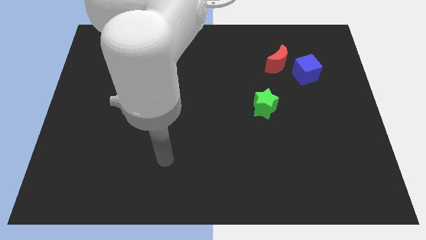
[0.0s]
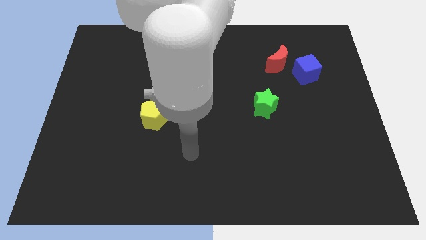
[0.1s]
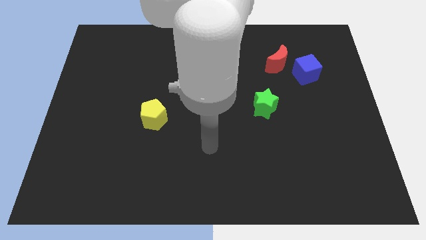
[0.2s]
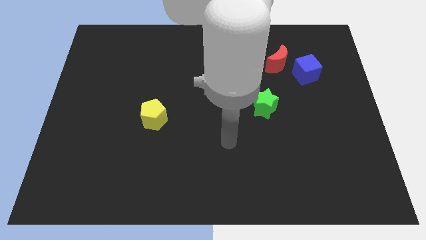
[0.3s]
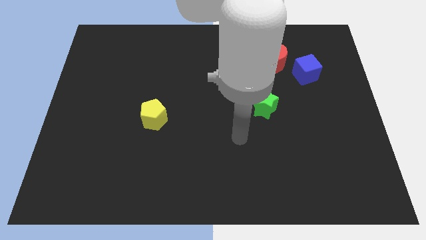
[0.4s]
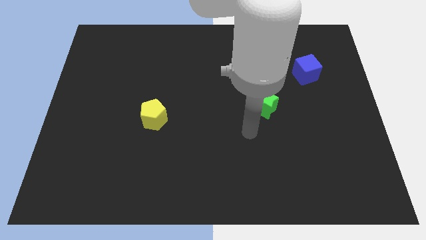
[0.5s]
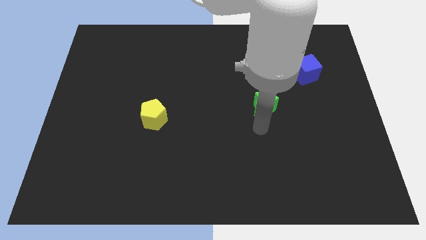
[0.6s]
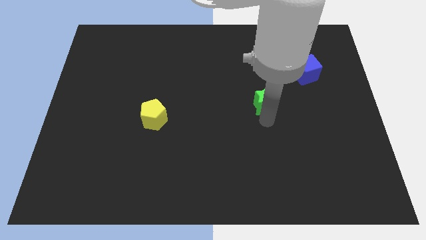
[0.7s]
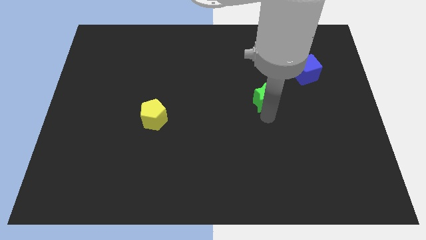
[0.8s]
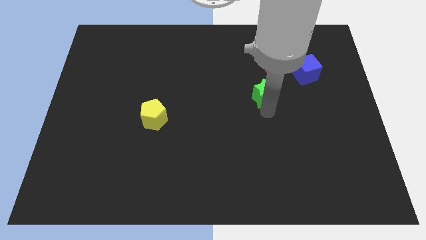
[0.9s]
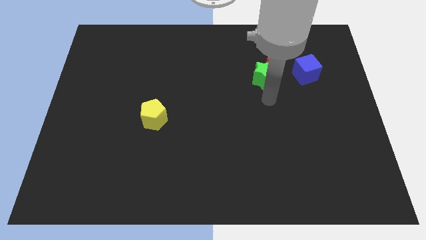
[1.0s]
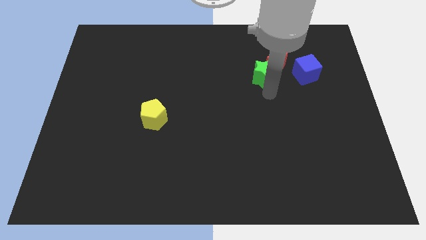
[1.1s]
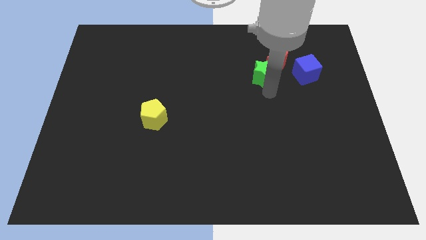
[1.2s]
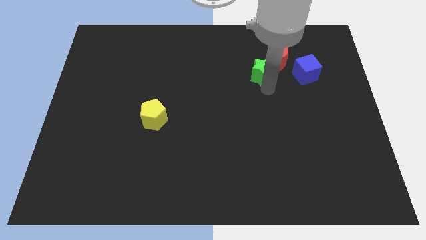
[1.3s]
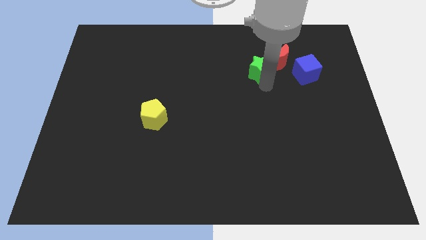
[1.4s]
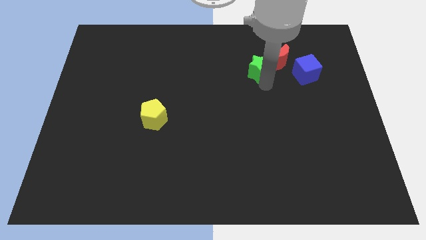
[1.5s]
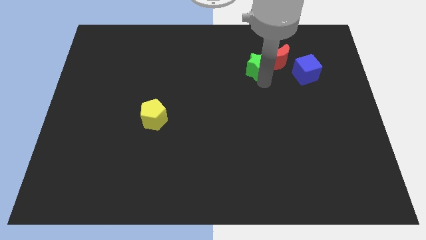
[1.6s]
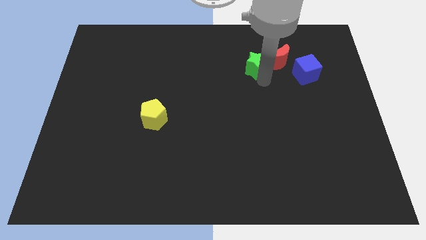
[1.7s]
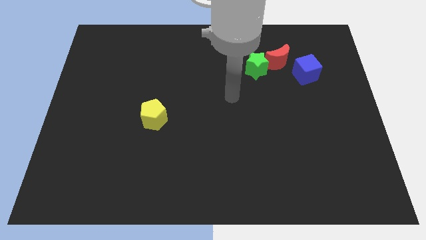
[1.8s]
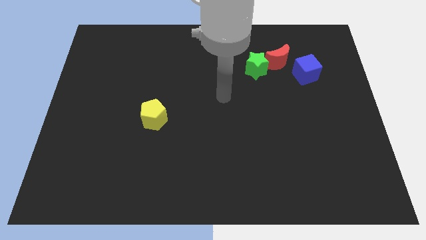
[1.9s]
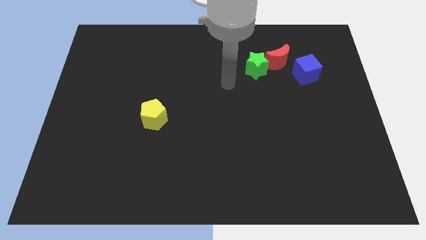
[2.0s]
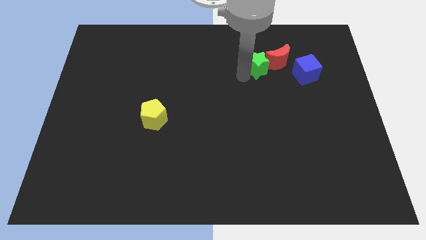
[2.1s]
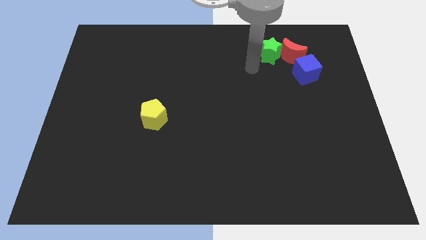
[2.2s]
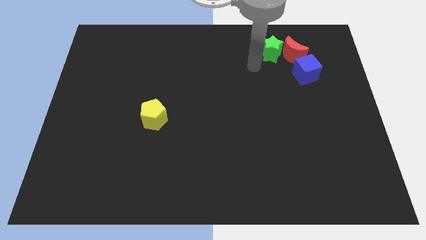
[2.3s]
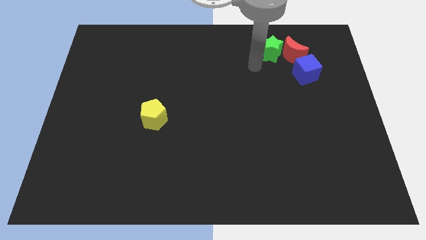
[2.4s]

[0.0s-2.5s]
put the star close to the moon

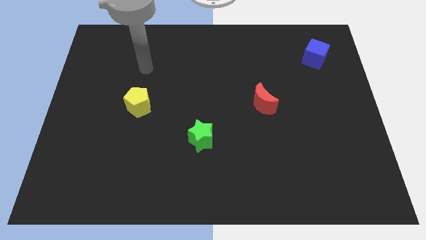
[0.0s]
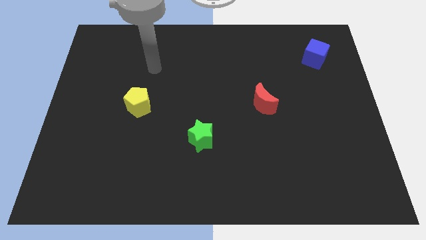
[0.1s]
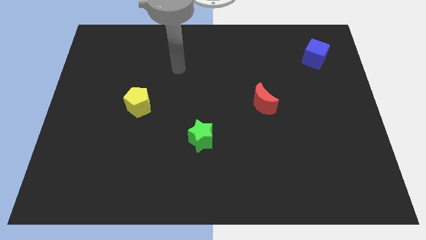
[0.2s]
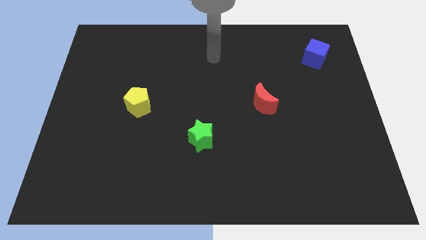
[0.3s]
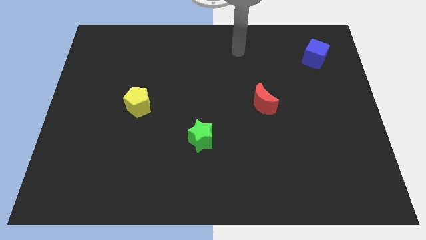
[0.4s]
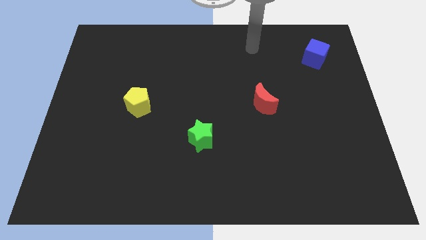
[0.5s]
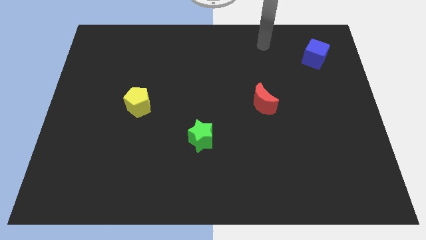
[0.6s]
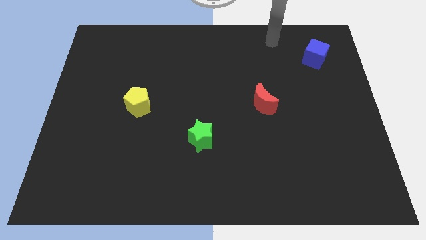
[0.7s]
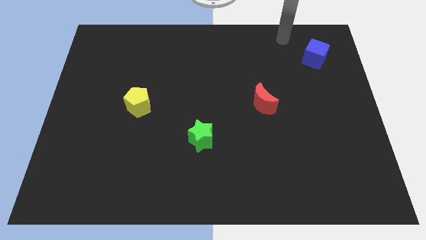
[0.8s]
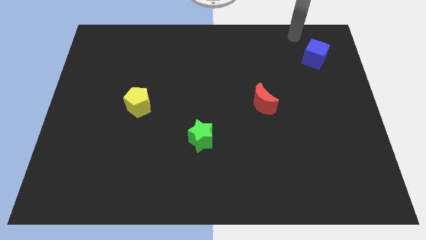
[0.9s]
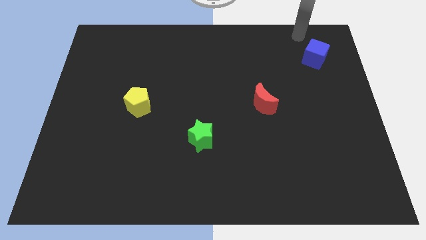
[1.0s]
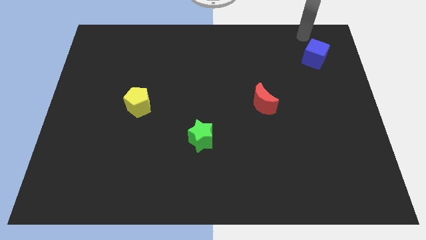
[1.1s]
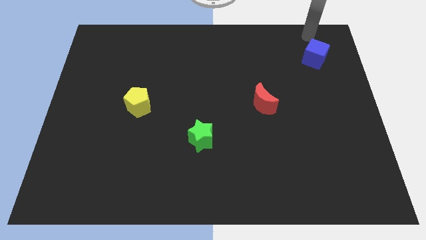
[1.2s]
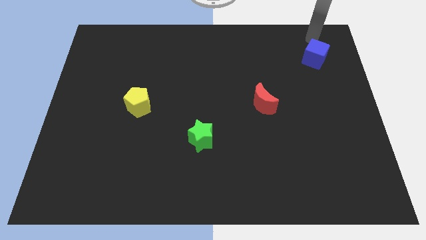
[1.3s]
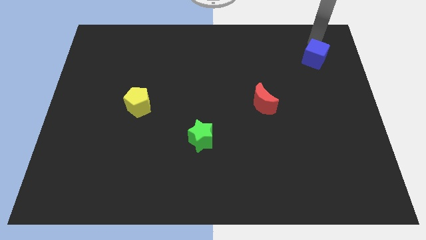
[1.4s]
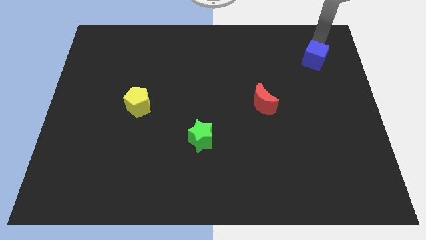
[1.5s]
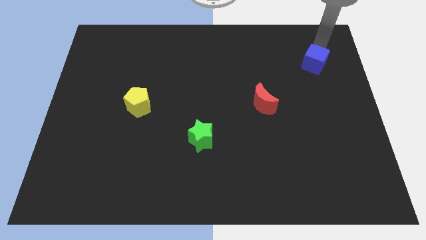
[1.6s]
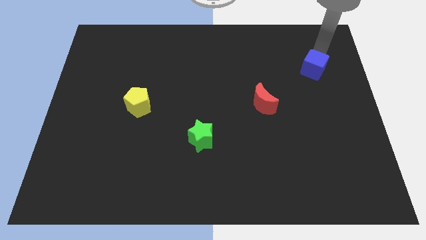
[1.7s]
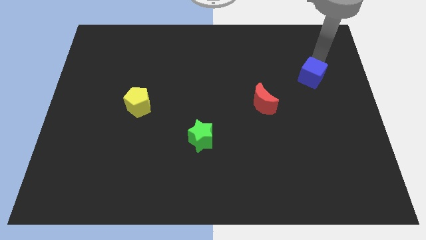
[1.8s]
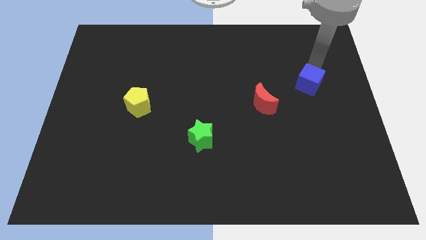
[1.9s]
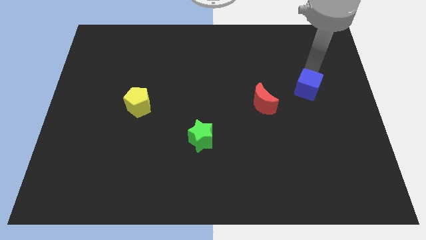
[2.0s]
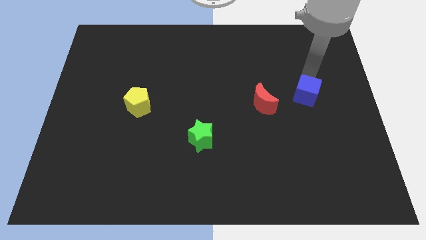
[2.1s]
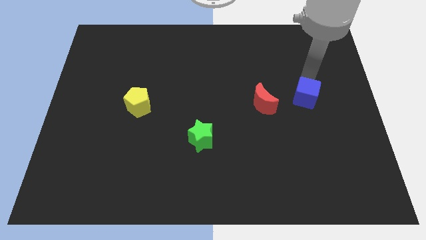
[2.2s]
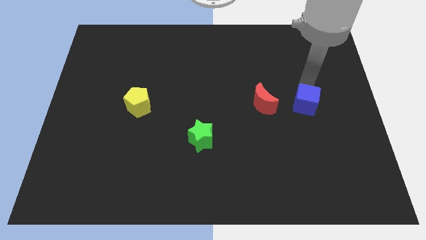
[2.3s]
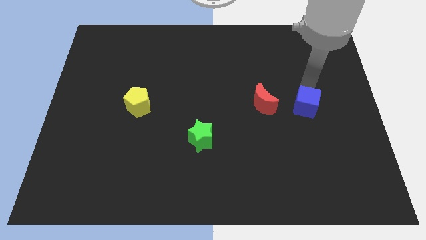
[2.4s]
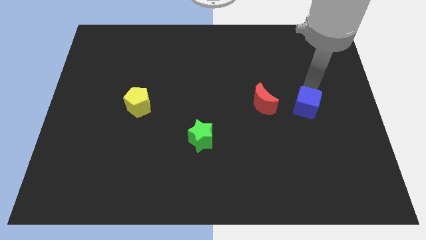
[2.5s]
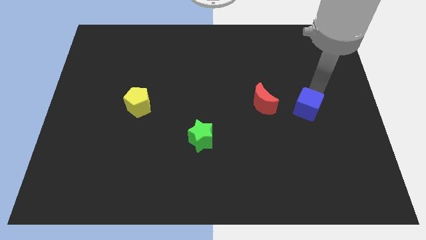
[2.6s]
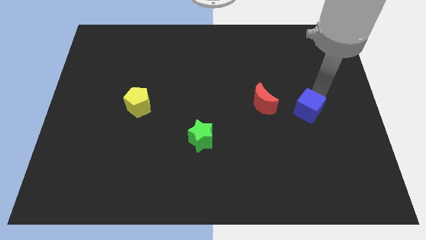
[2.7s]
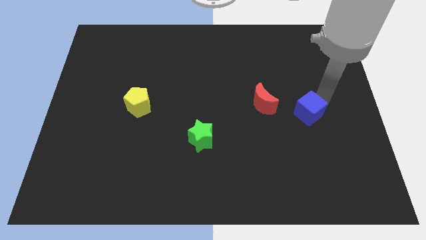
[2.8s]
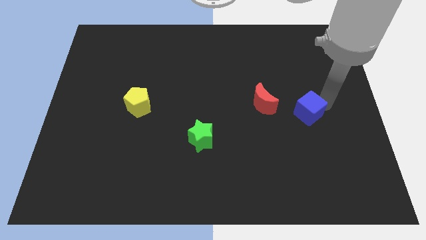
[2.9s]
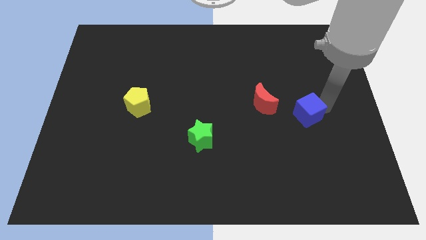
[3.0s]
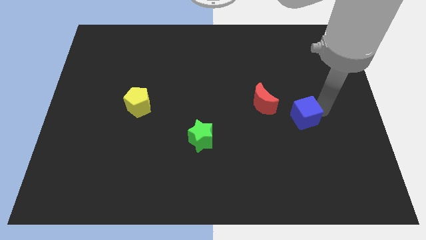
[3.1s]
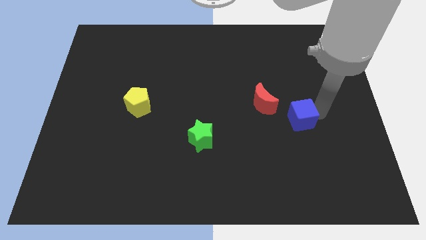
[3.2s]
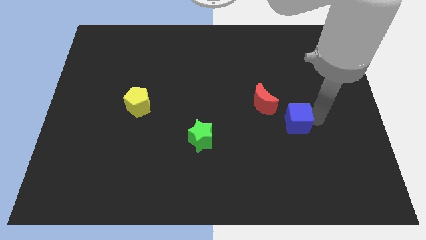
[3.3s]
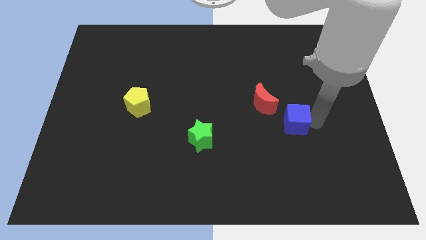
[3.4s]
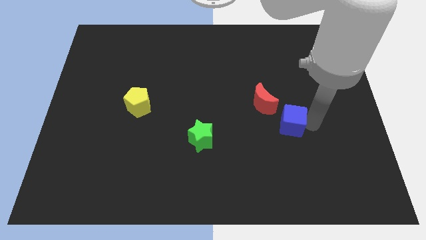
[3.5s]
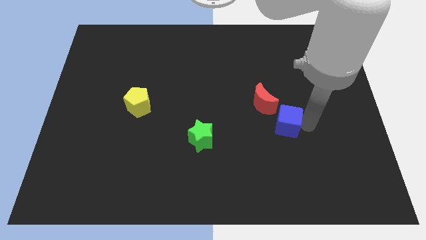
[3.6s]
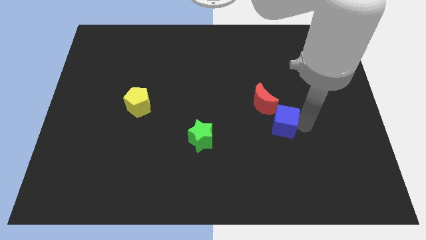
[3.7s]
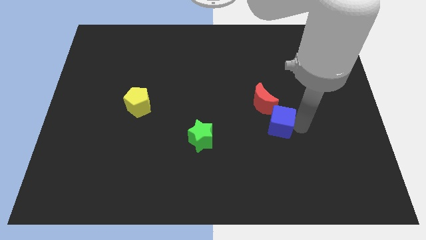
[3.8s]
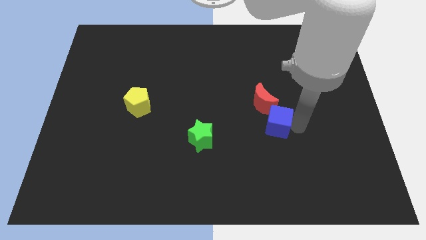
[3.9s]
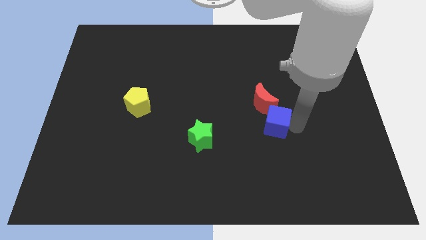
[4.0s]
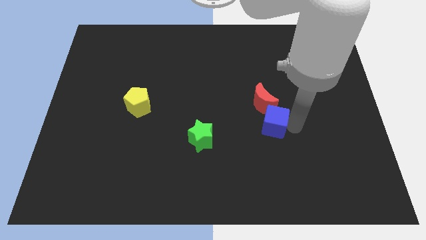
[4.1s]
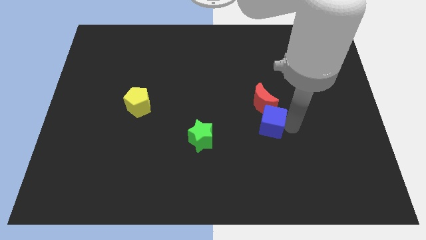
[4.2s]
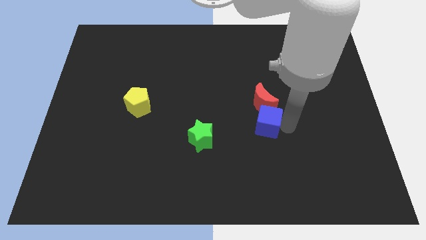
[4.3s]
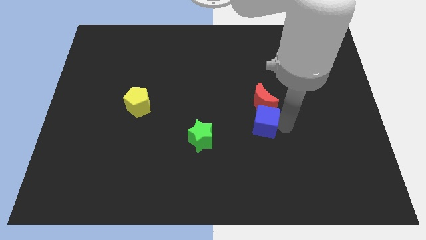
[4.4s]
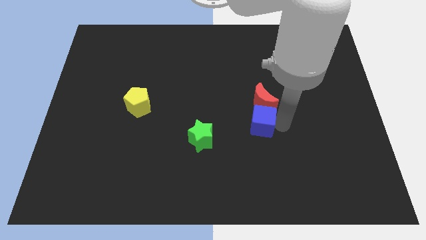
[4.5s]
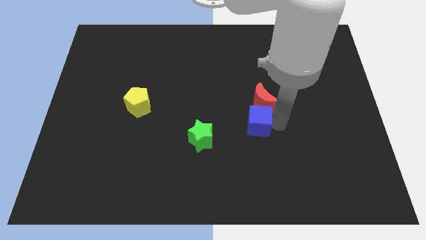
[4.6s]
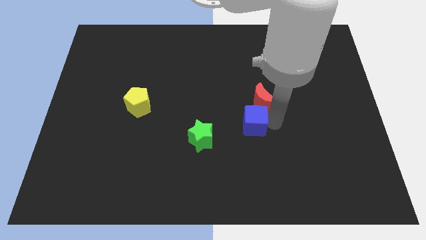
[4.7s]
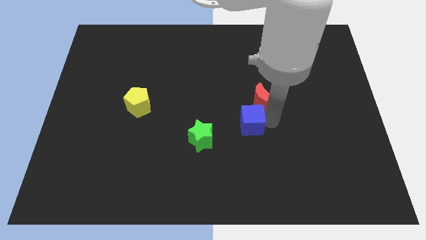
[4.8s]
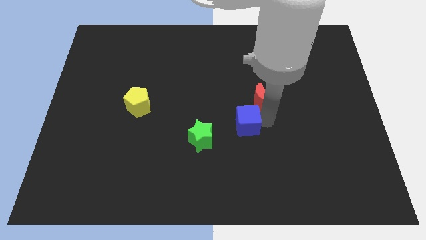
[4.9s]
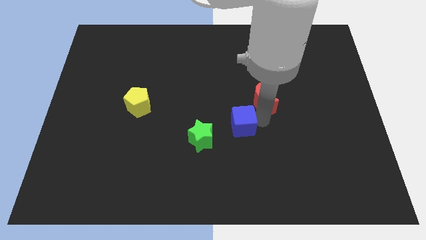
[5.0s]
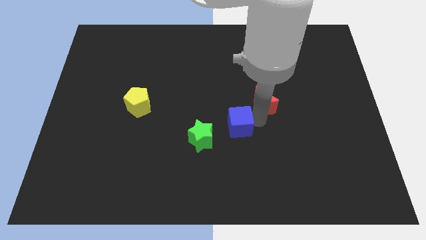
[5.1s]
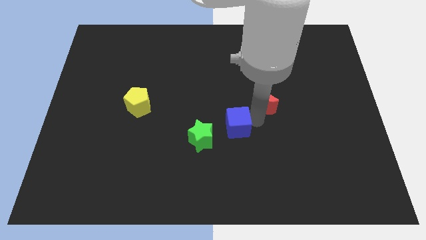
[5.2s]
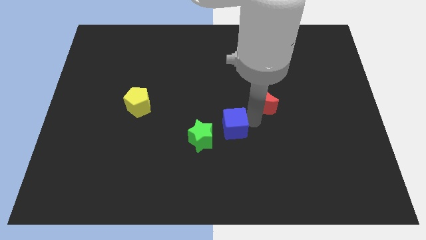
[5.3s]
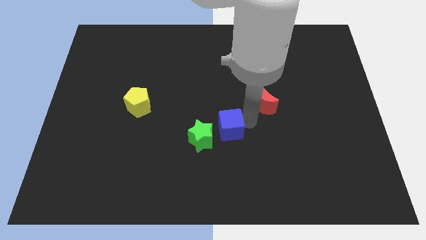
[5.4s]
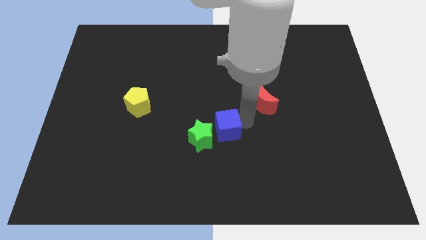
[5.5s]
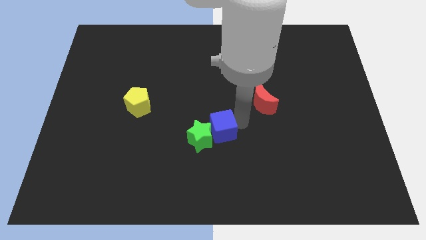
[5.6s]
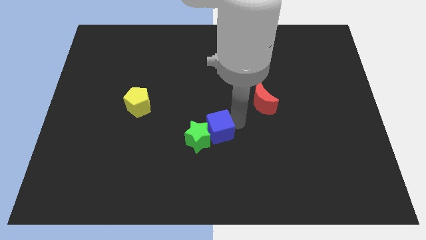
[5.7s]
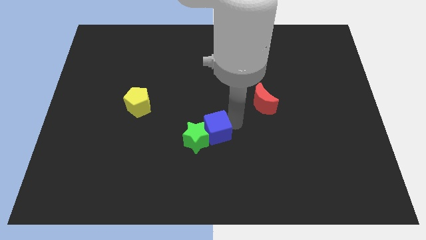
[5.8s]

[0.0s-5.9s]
put the cube close to the green block
